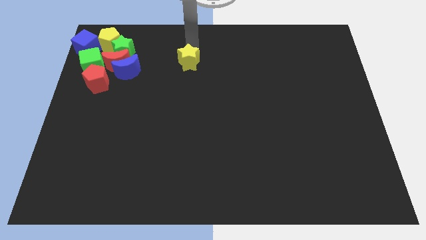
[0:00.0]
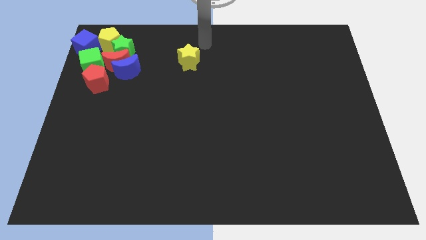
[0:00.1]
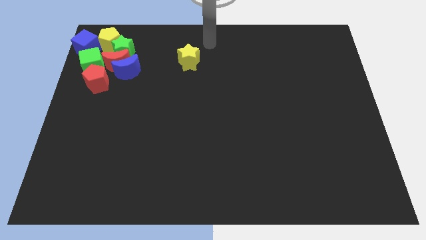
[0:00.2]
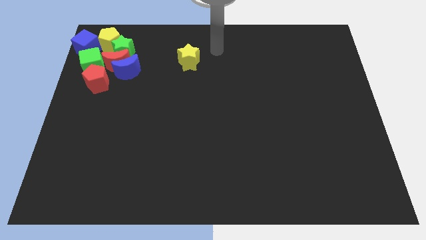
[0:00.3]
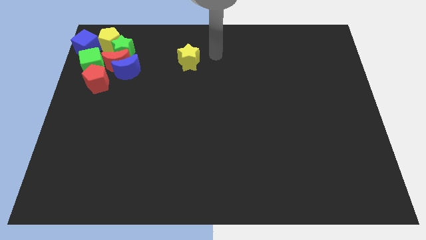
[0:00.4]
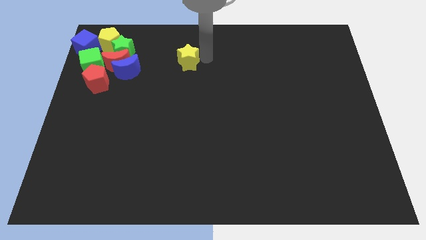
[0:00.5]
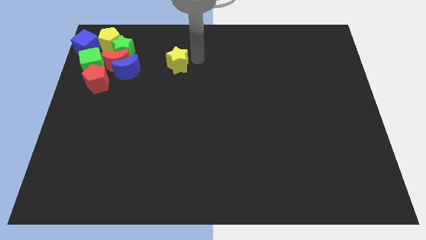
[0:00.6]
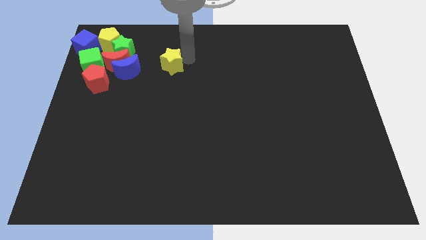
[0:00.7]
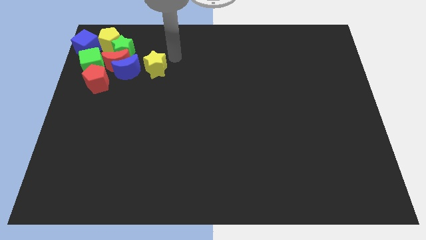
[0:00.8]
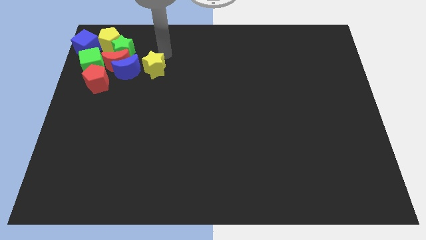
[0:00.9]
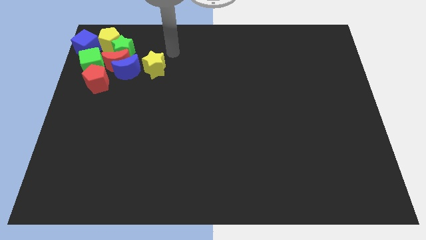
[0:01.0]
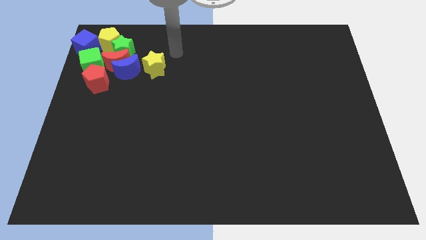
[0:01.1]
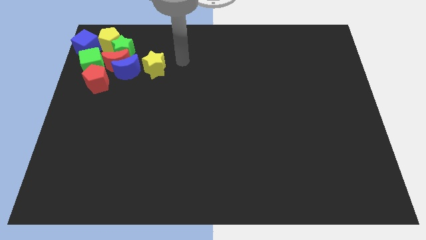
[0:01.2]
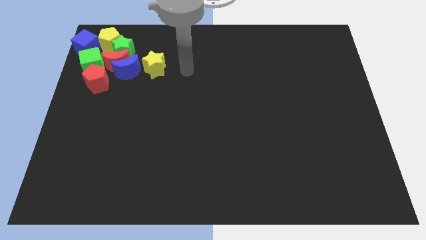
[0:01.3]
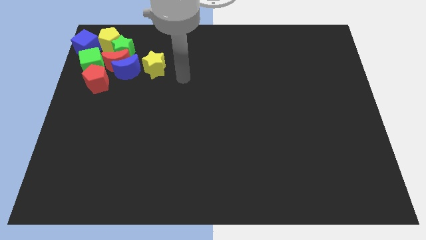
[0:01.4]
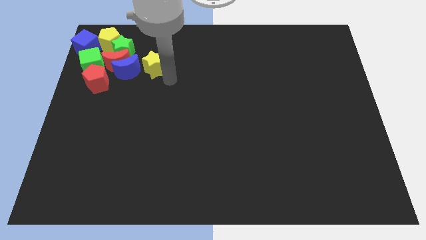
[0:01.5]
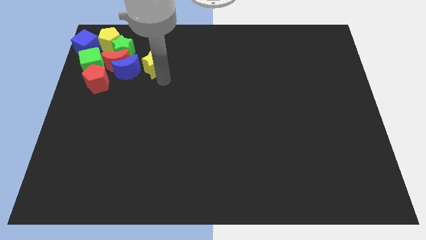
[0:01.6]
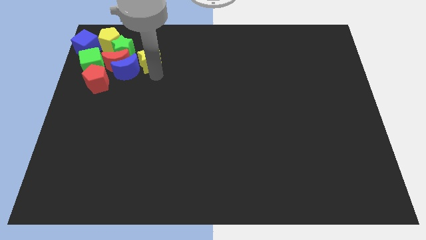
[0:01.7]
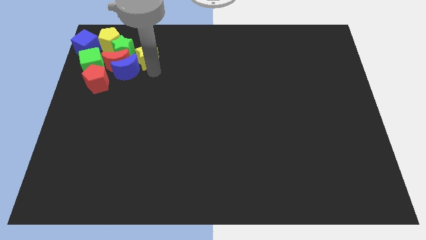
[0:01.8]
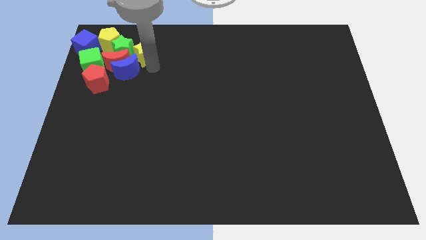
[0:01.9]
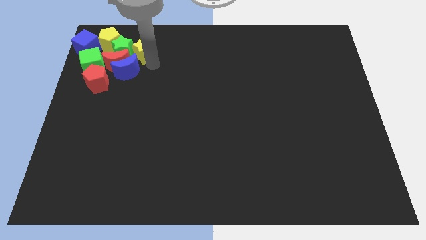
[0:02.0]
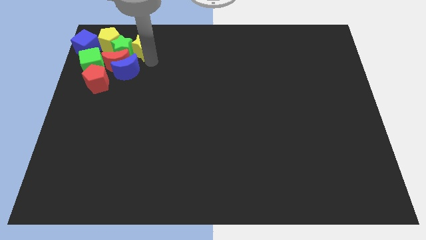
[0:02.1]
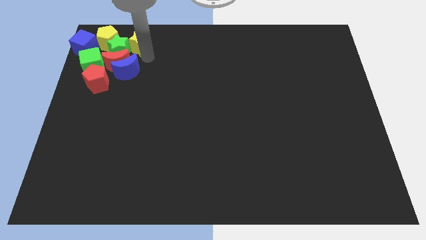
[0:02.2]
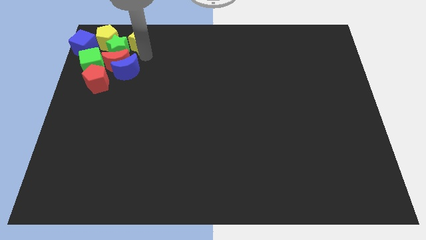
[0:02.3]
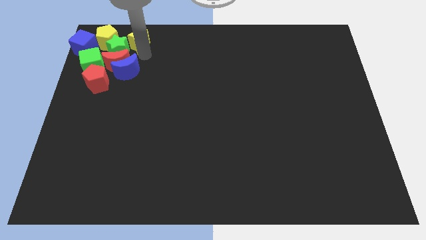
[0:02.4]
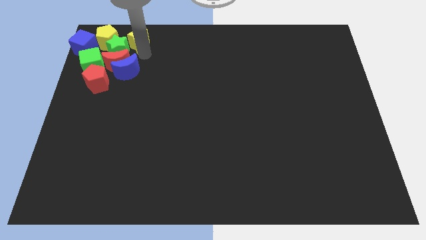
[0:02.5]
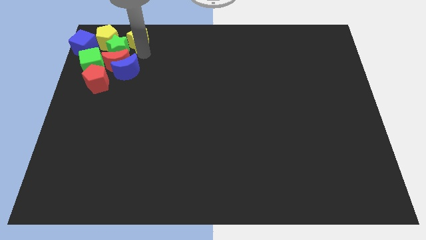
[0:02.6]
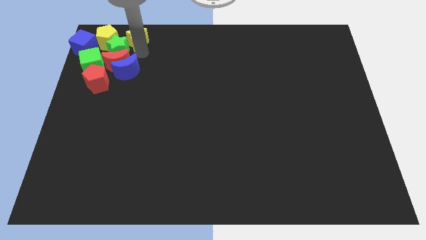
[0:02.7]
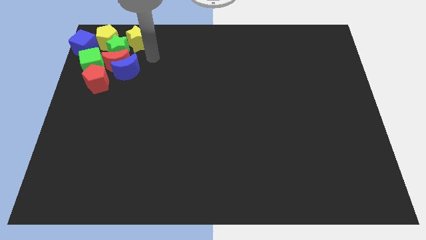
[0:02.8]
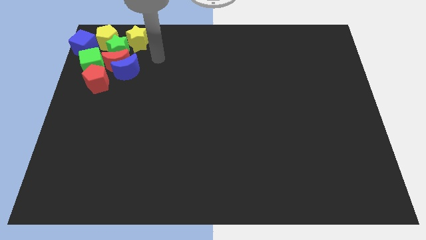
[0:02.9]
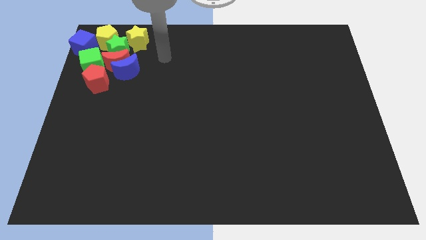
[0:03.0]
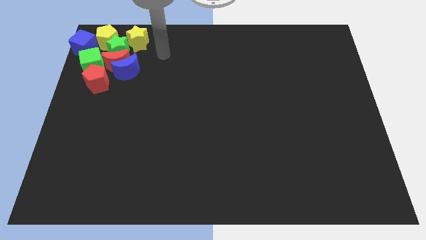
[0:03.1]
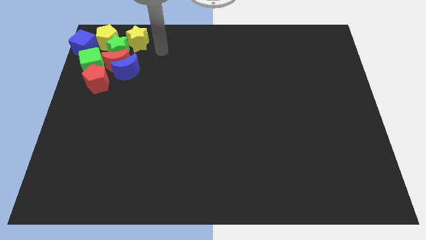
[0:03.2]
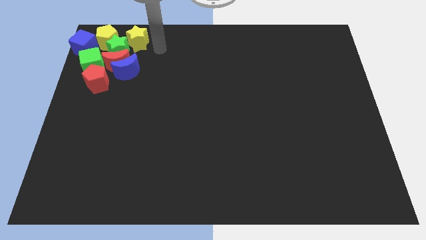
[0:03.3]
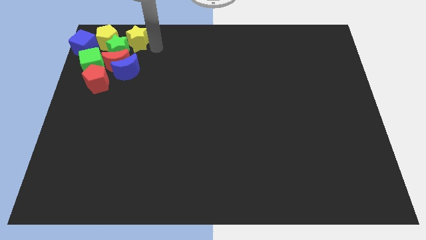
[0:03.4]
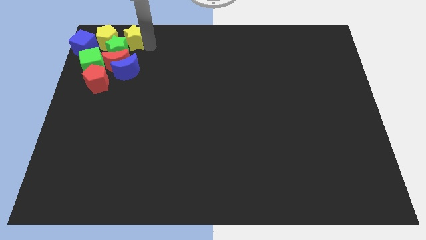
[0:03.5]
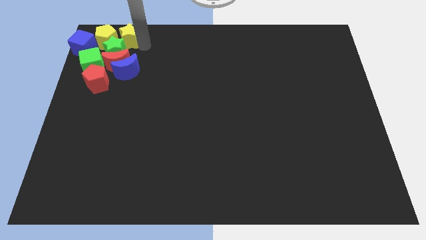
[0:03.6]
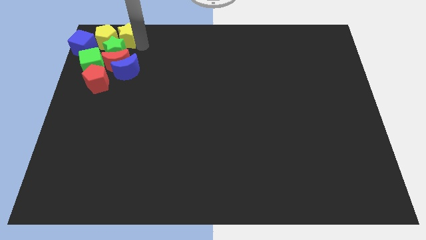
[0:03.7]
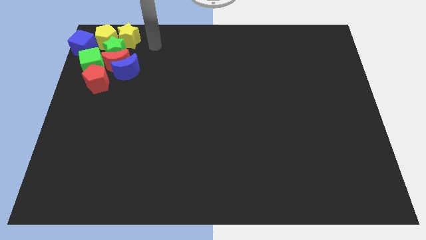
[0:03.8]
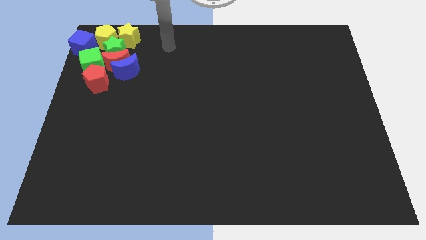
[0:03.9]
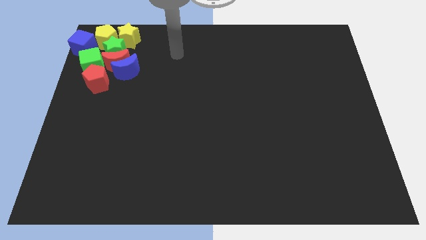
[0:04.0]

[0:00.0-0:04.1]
move the yellow star into the group of blocks

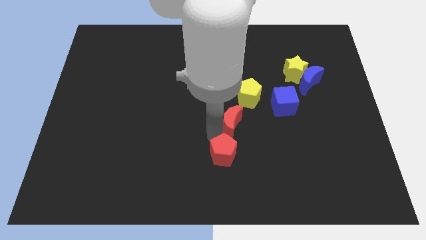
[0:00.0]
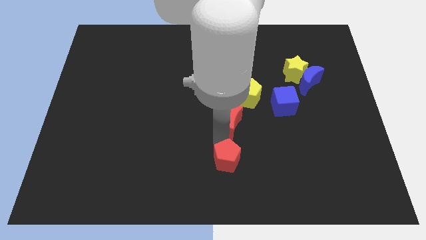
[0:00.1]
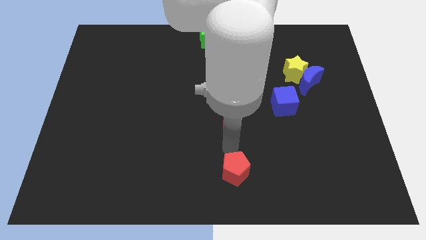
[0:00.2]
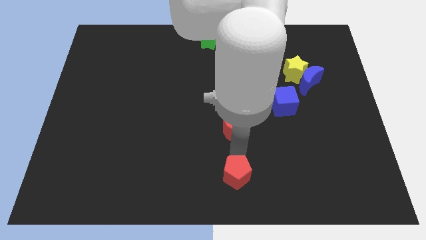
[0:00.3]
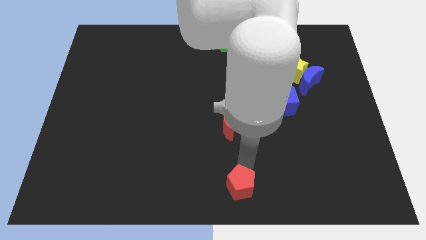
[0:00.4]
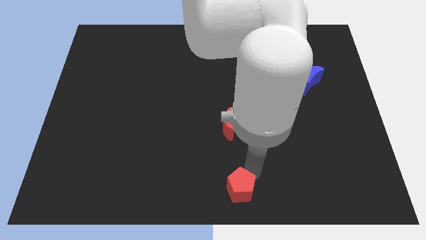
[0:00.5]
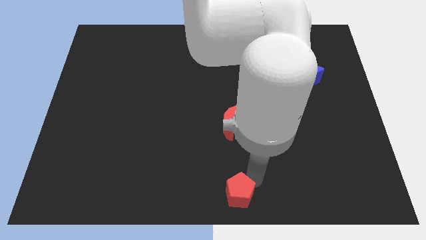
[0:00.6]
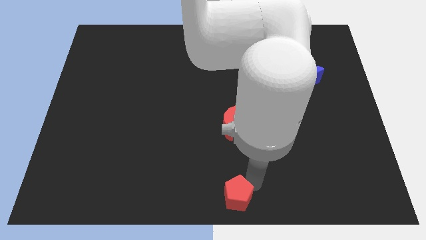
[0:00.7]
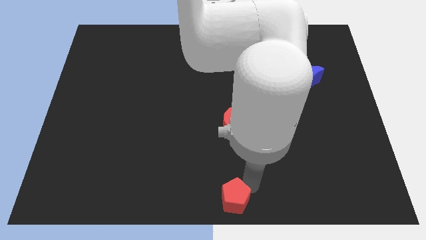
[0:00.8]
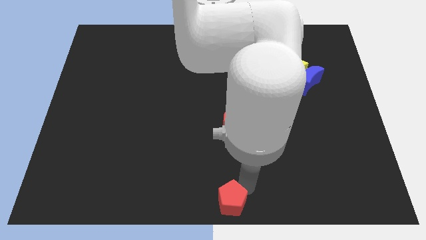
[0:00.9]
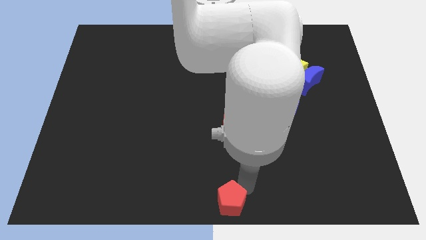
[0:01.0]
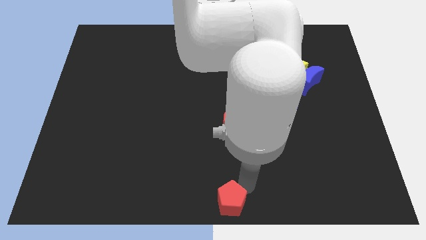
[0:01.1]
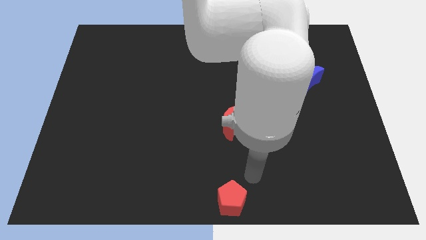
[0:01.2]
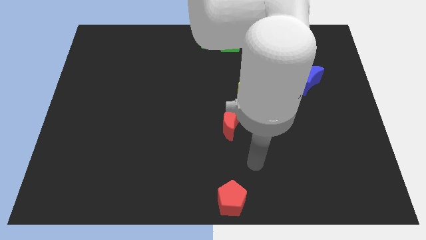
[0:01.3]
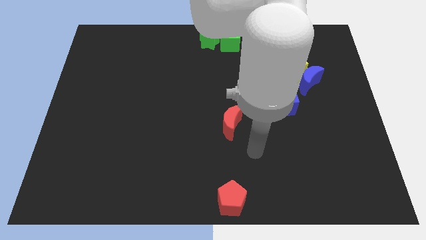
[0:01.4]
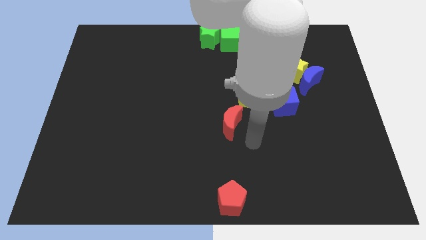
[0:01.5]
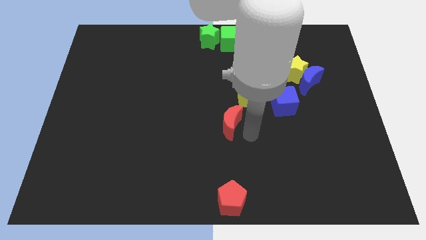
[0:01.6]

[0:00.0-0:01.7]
push the red pentagon to the bottom centre of the board

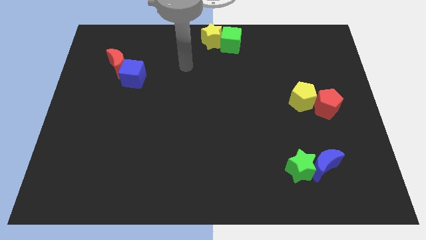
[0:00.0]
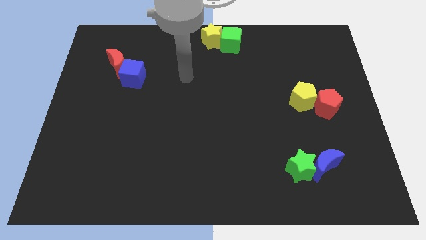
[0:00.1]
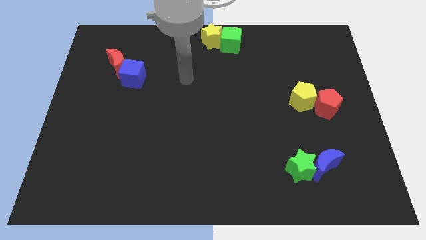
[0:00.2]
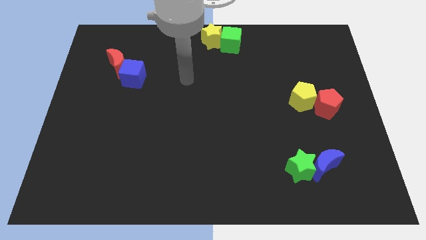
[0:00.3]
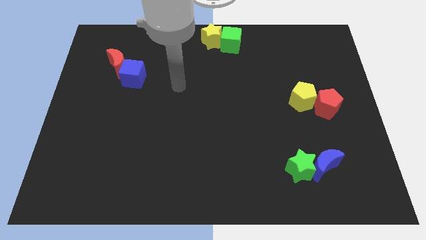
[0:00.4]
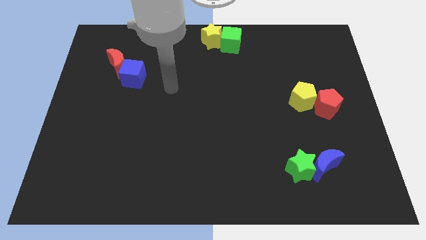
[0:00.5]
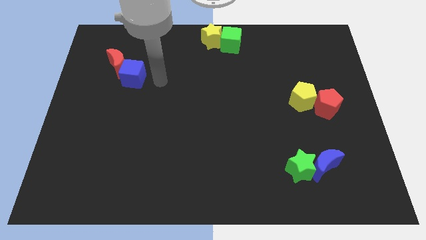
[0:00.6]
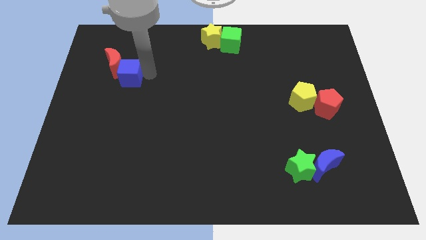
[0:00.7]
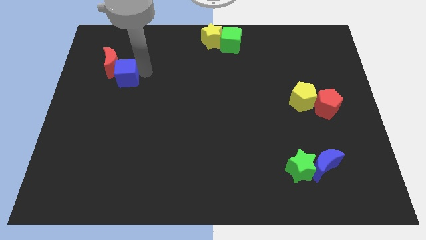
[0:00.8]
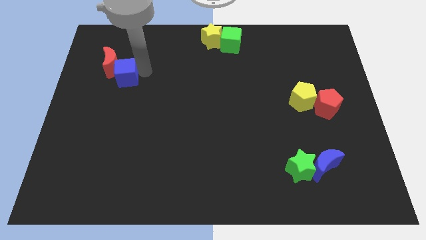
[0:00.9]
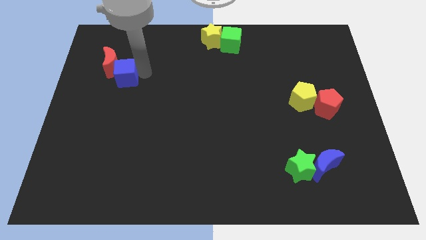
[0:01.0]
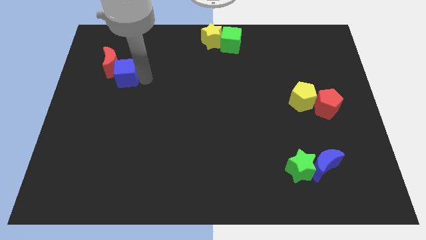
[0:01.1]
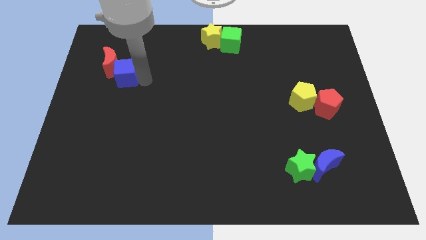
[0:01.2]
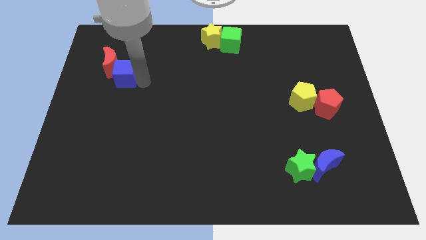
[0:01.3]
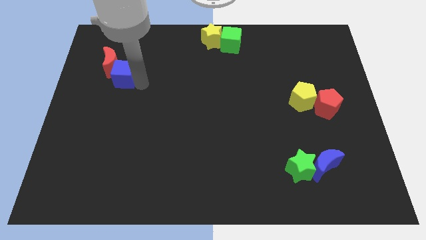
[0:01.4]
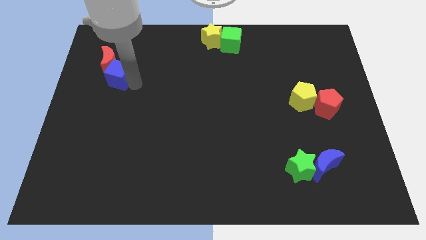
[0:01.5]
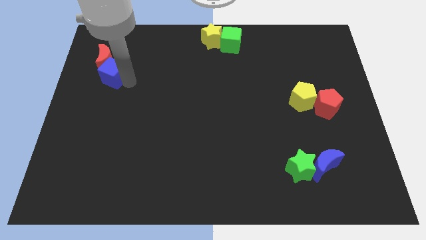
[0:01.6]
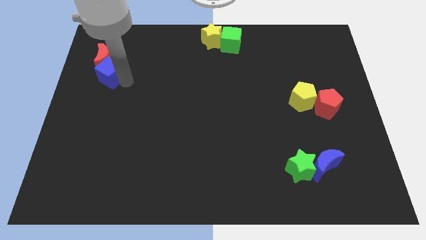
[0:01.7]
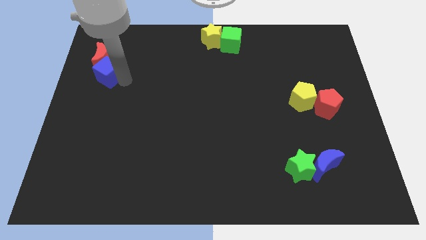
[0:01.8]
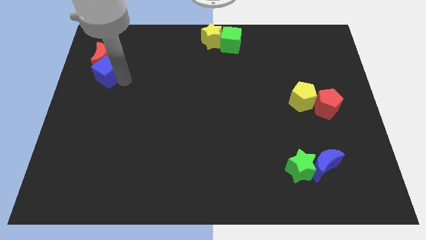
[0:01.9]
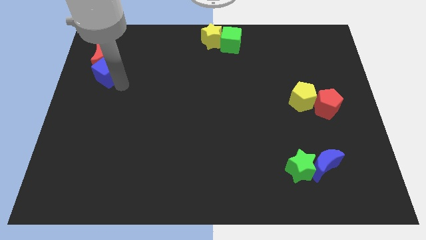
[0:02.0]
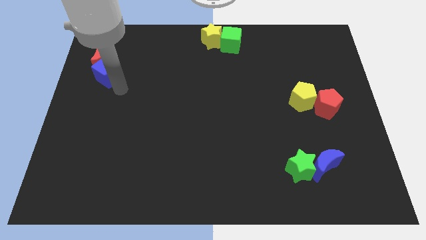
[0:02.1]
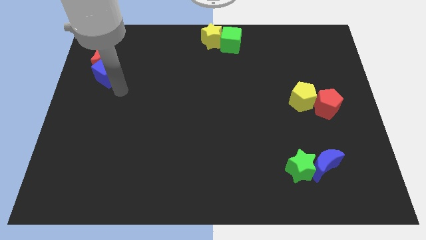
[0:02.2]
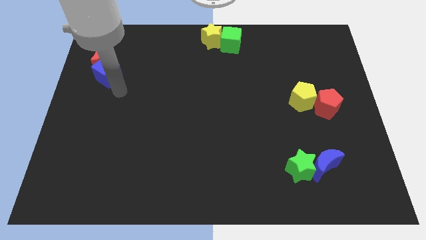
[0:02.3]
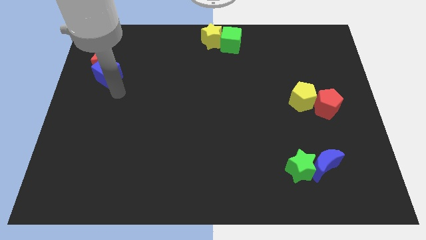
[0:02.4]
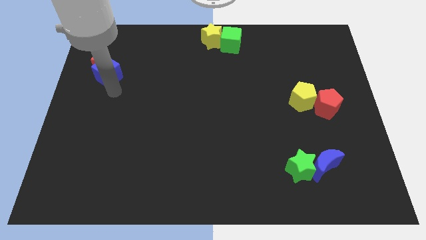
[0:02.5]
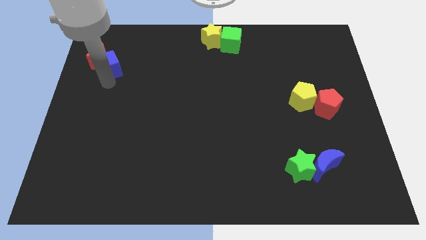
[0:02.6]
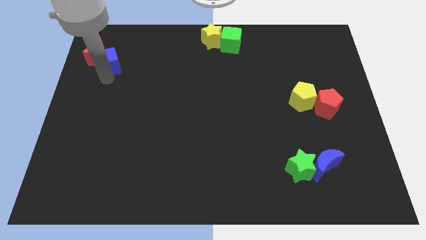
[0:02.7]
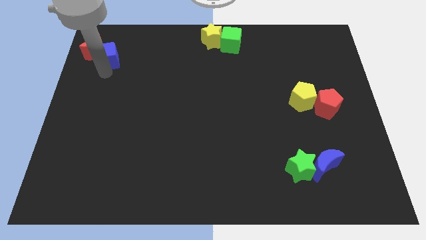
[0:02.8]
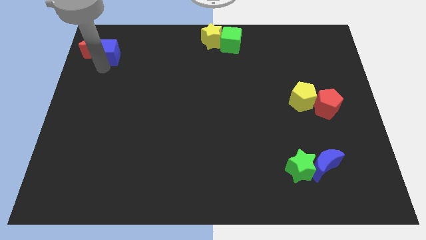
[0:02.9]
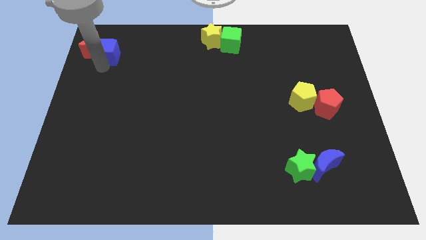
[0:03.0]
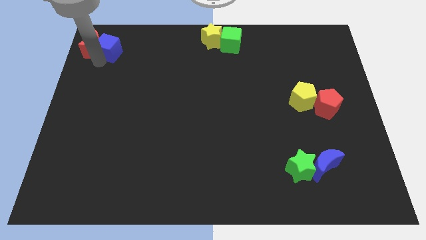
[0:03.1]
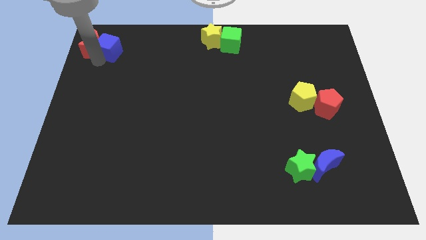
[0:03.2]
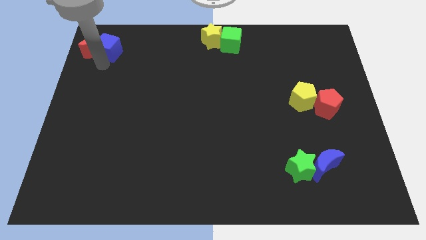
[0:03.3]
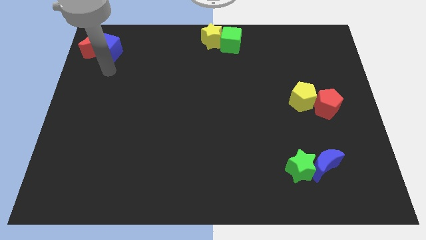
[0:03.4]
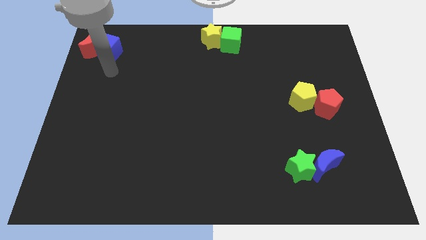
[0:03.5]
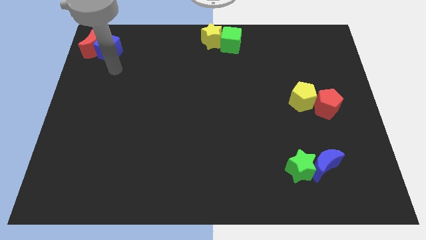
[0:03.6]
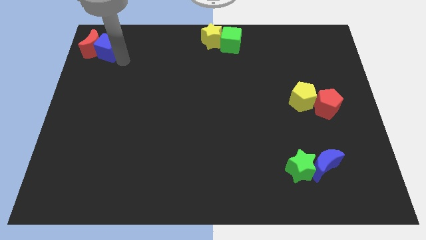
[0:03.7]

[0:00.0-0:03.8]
push the blue cube and the red crescent to the top left of the board
